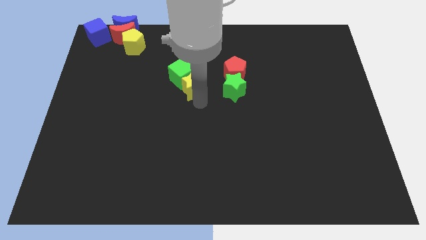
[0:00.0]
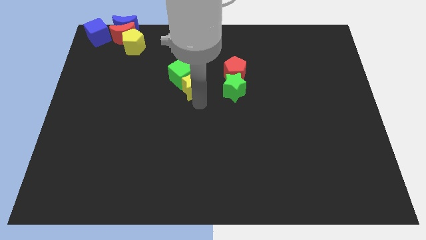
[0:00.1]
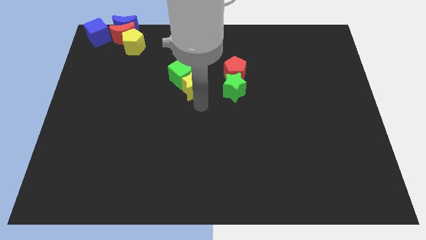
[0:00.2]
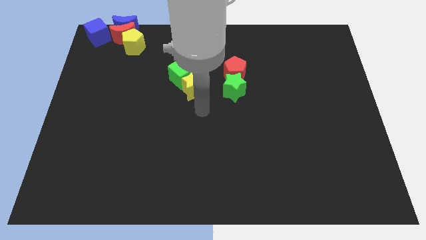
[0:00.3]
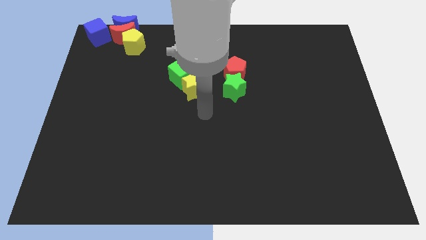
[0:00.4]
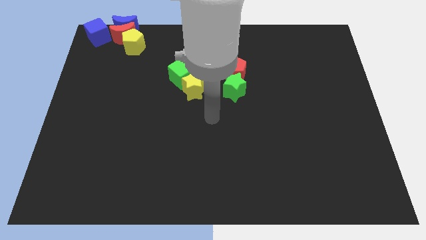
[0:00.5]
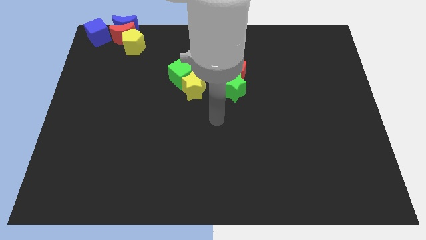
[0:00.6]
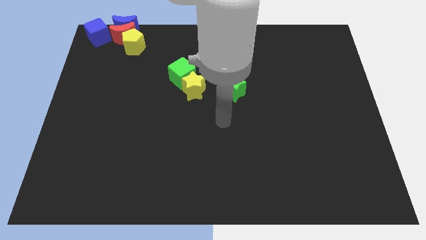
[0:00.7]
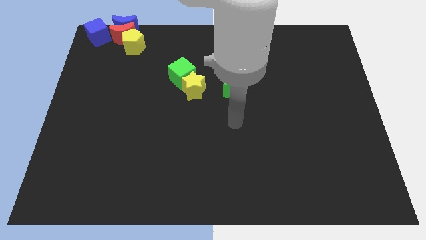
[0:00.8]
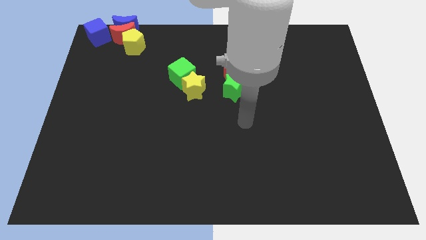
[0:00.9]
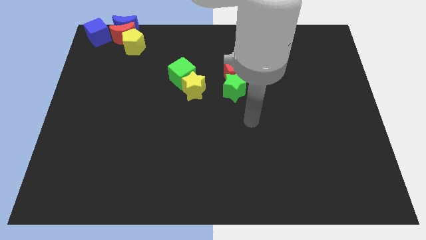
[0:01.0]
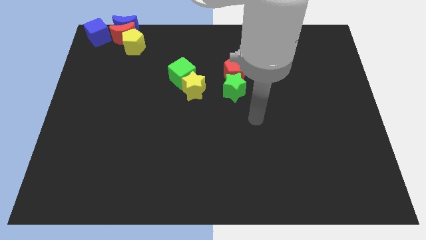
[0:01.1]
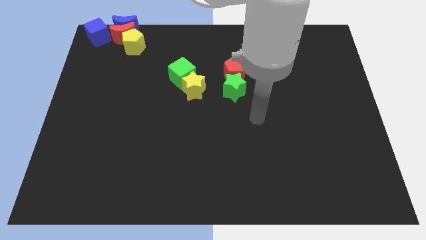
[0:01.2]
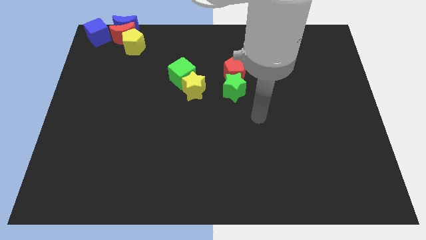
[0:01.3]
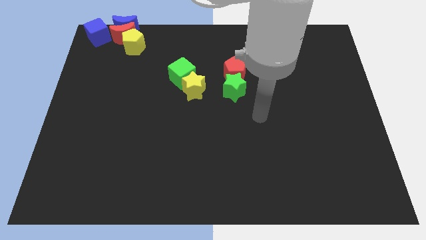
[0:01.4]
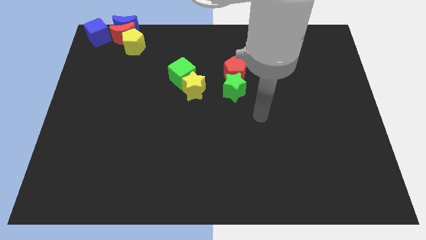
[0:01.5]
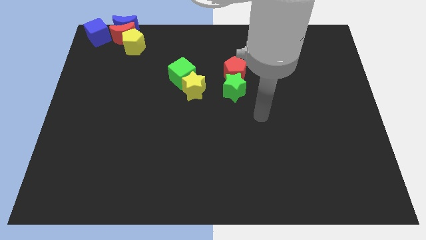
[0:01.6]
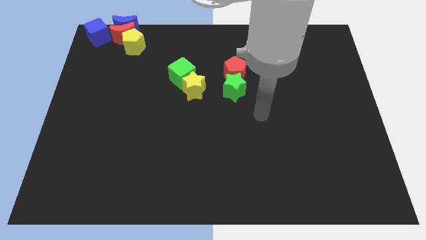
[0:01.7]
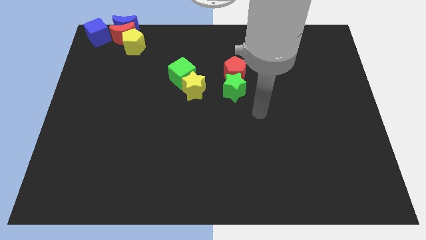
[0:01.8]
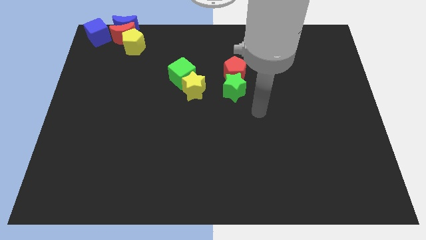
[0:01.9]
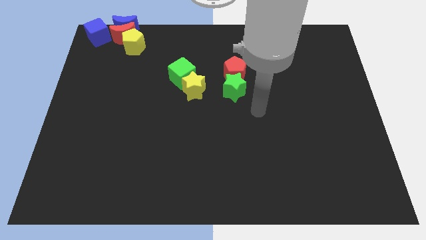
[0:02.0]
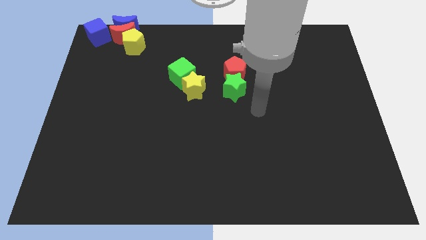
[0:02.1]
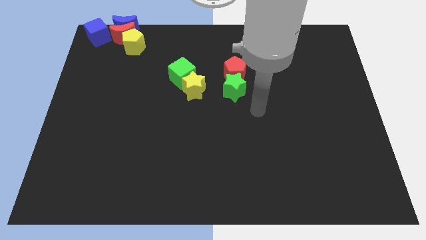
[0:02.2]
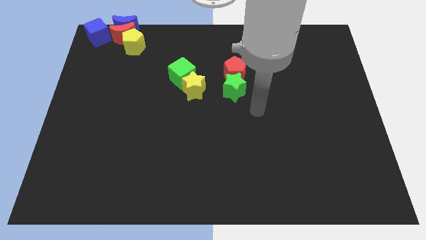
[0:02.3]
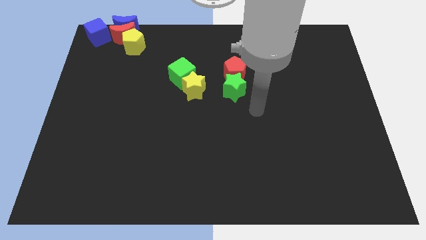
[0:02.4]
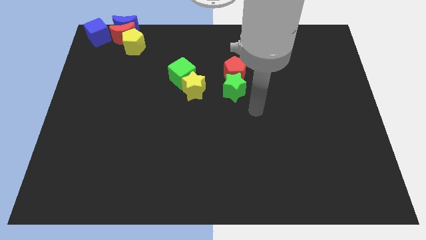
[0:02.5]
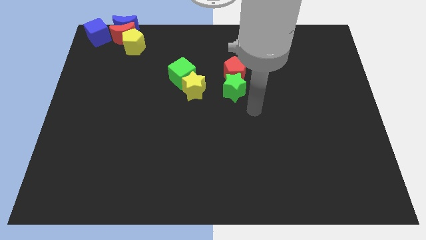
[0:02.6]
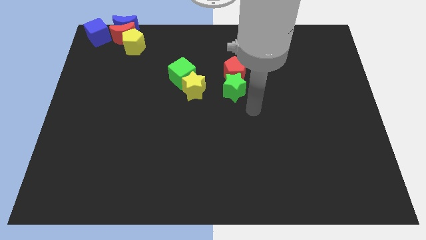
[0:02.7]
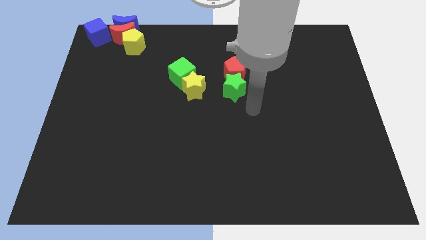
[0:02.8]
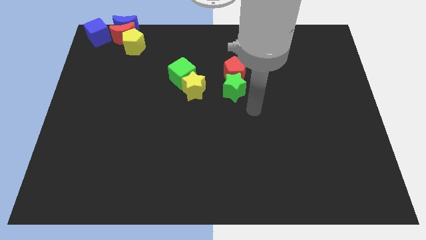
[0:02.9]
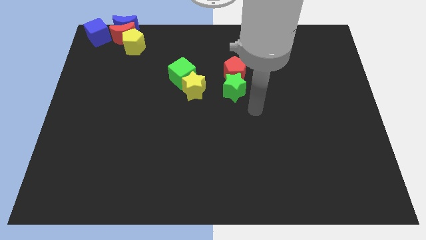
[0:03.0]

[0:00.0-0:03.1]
move the arm towards green star

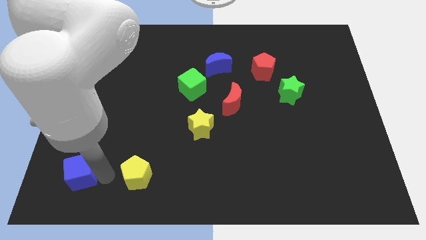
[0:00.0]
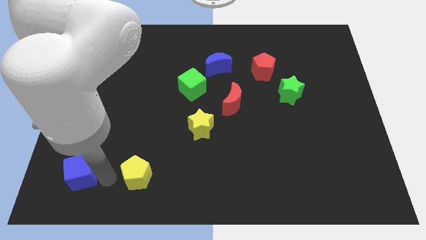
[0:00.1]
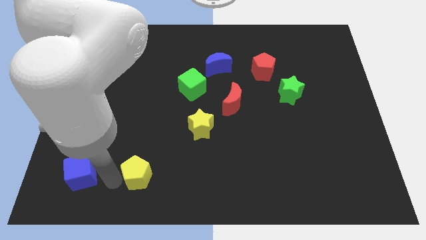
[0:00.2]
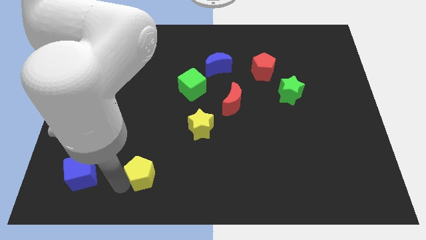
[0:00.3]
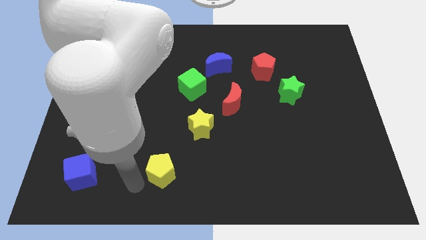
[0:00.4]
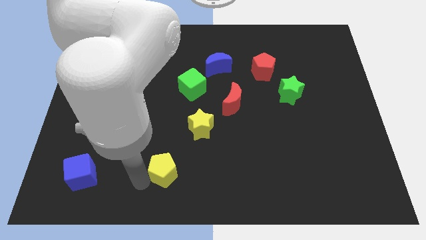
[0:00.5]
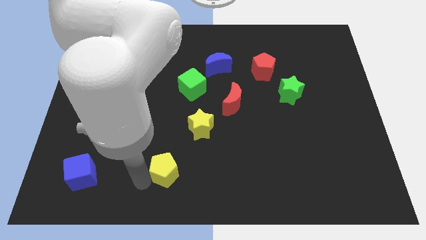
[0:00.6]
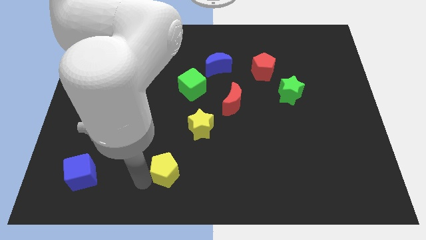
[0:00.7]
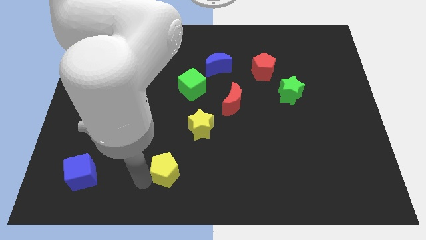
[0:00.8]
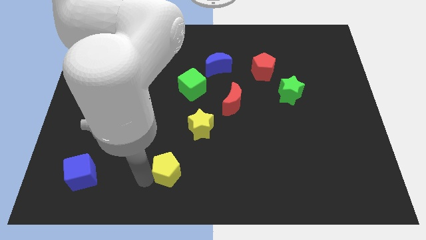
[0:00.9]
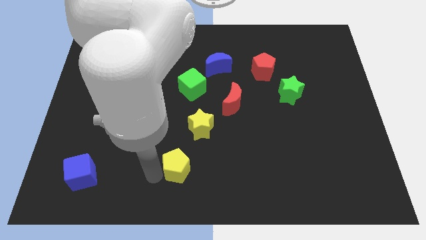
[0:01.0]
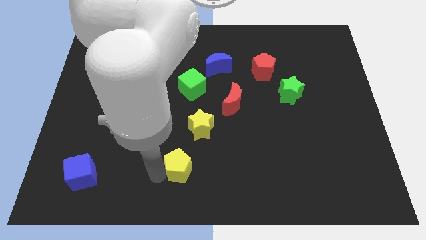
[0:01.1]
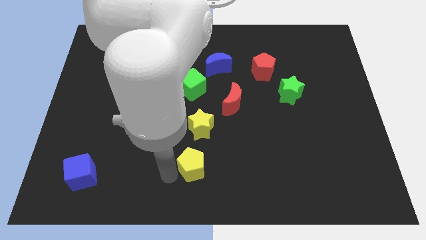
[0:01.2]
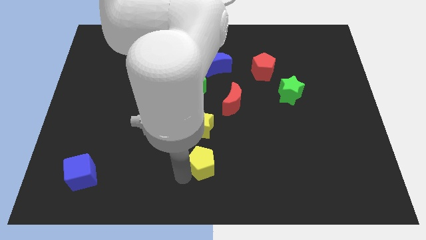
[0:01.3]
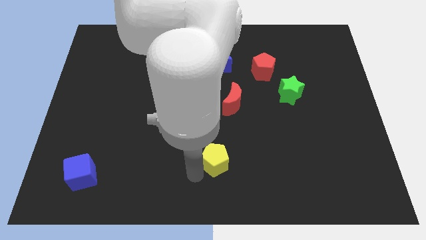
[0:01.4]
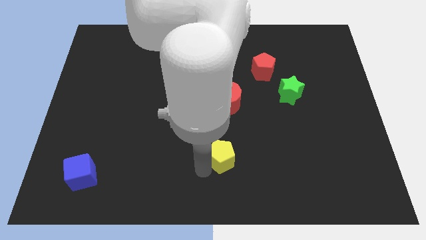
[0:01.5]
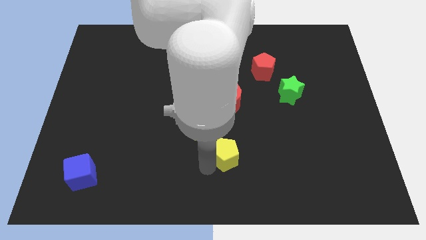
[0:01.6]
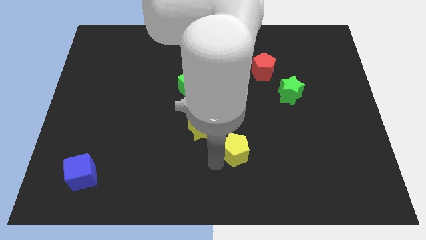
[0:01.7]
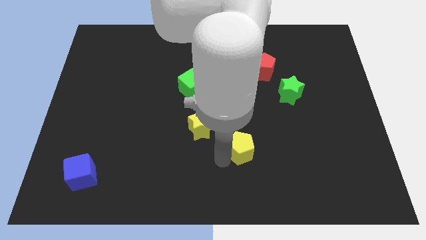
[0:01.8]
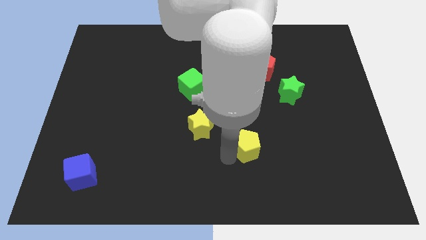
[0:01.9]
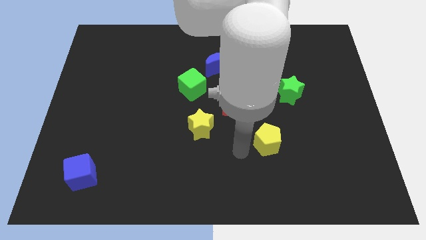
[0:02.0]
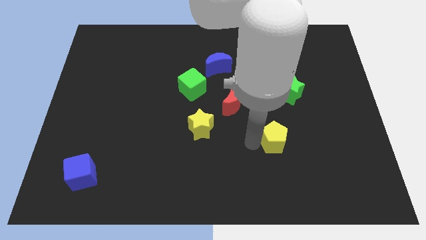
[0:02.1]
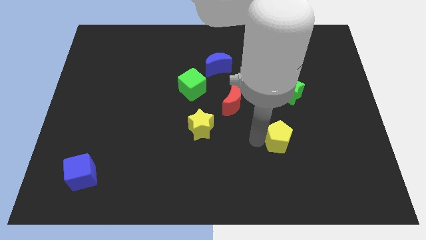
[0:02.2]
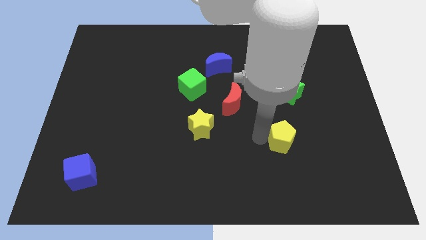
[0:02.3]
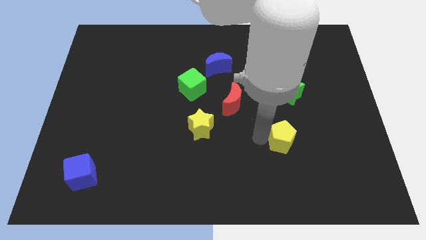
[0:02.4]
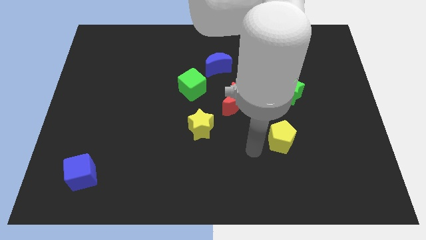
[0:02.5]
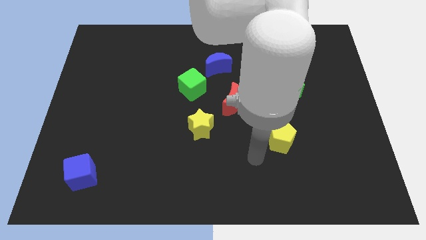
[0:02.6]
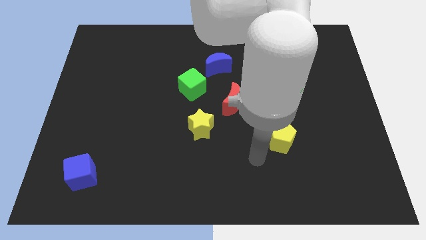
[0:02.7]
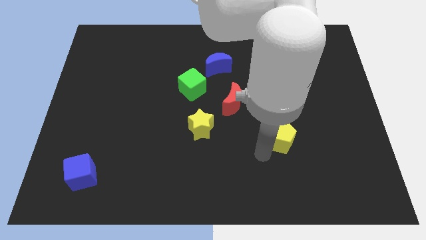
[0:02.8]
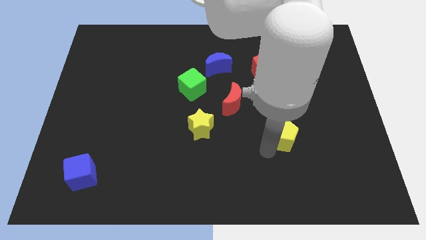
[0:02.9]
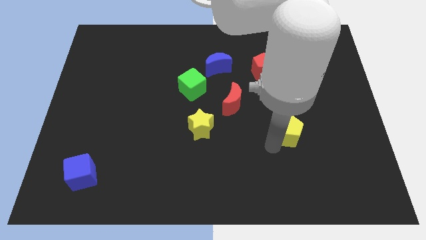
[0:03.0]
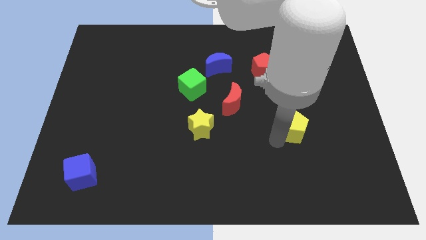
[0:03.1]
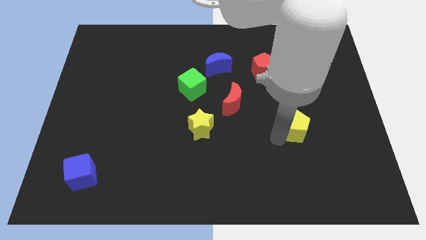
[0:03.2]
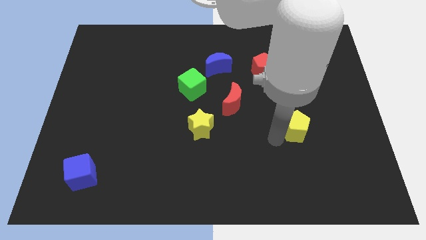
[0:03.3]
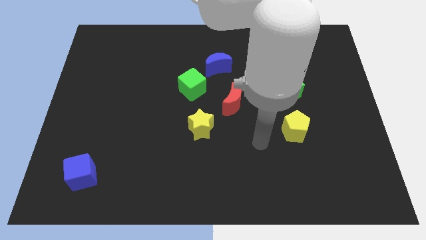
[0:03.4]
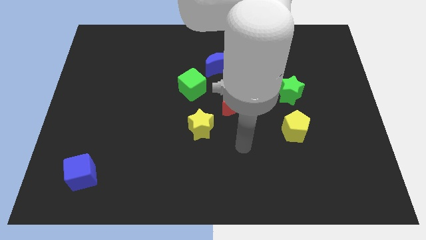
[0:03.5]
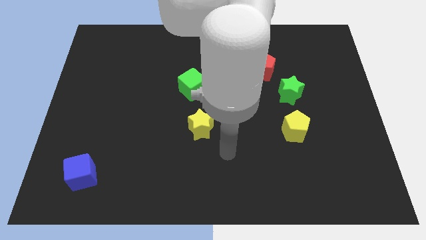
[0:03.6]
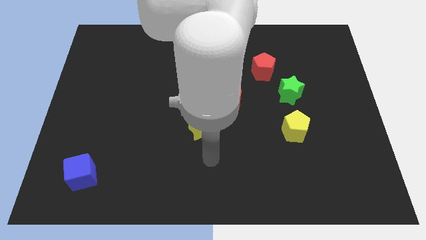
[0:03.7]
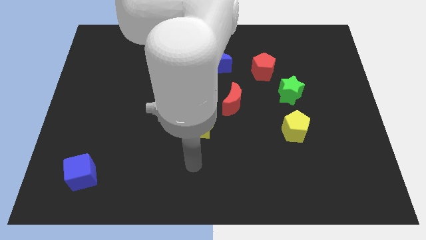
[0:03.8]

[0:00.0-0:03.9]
place yellow pentagon to the bottom of green star

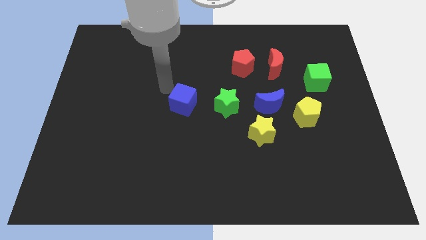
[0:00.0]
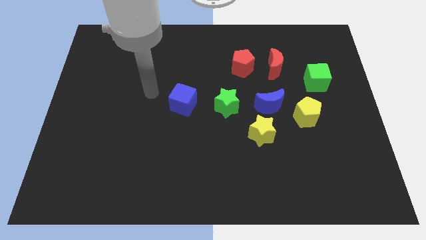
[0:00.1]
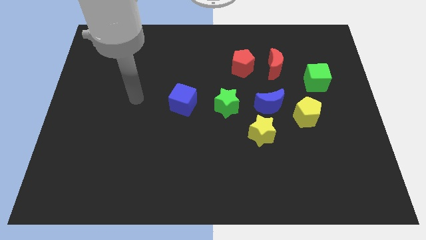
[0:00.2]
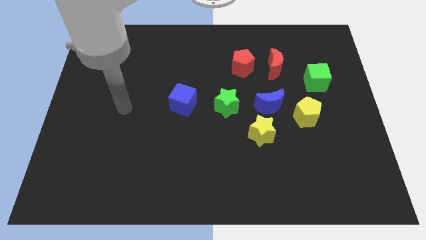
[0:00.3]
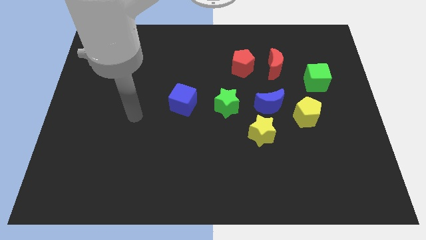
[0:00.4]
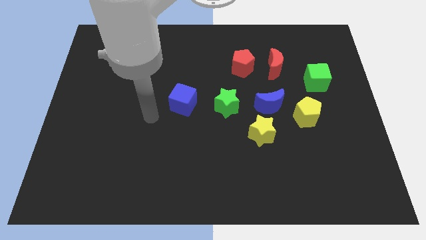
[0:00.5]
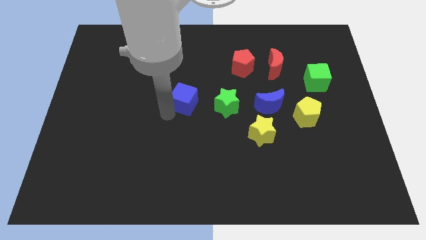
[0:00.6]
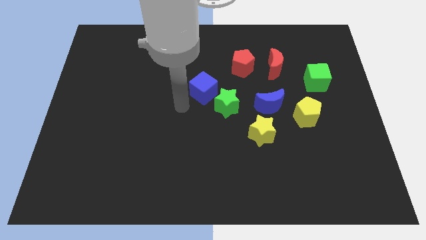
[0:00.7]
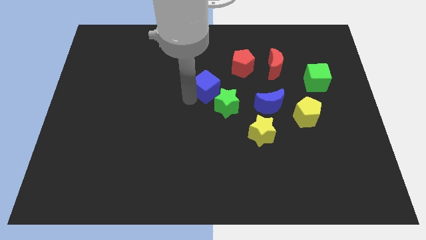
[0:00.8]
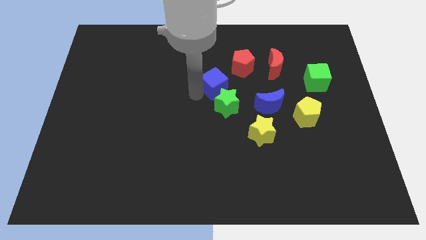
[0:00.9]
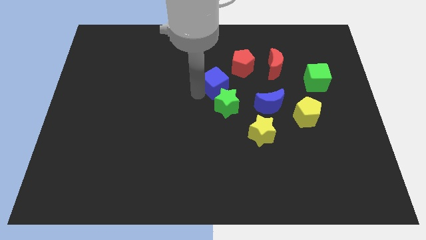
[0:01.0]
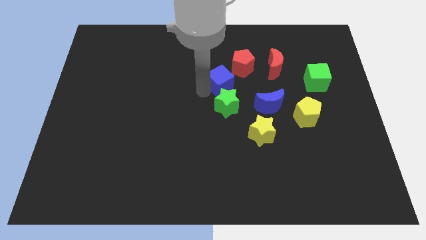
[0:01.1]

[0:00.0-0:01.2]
place the blue cube diagonally above the green star

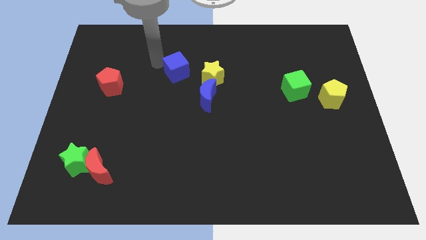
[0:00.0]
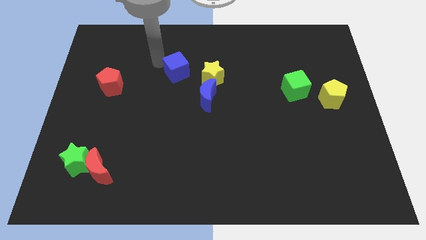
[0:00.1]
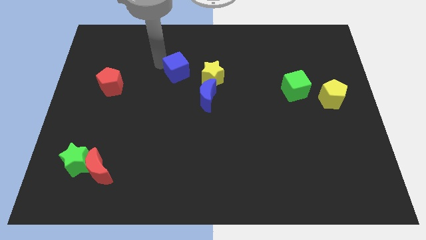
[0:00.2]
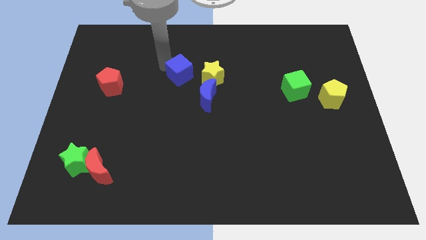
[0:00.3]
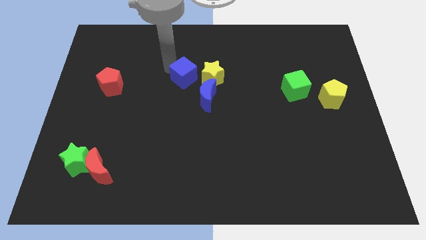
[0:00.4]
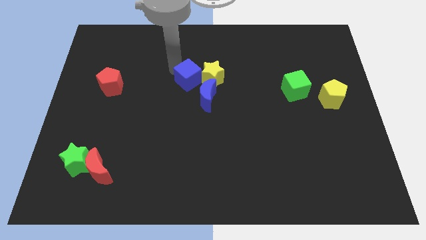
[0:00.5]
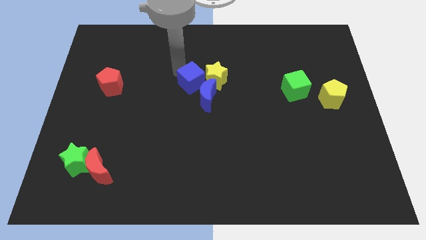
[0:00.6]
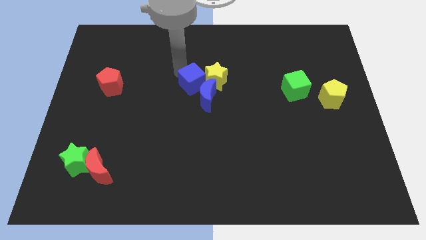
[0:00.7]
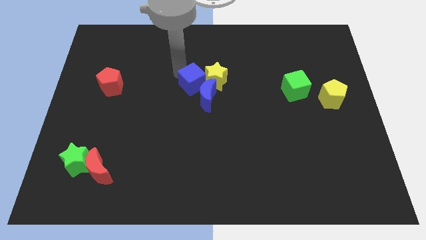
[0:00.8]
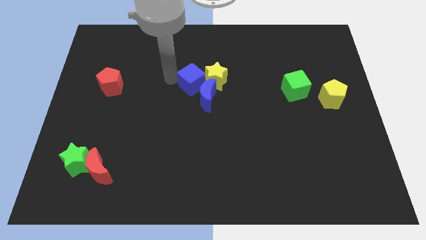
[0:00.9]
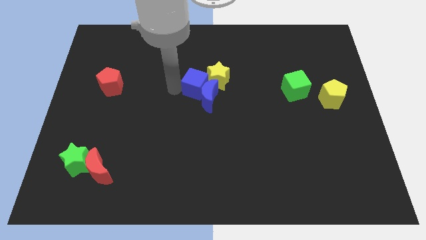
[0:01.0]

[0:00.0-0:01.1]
push the blue cube into the yellow block
